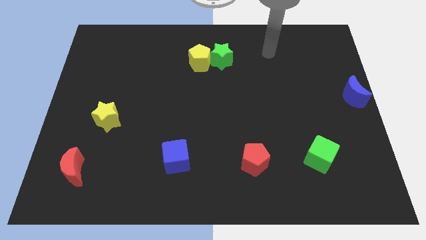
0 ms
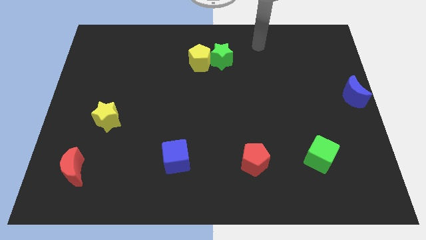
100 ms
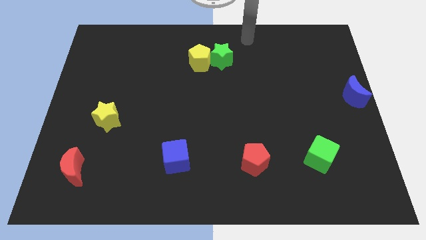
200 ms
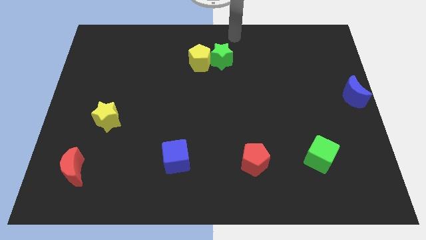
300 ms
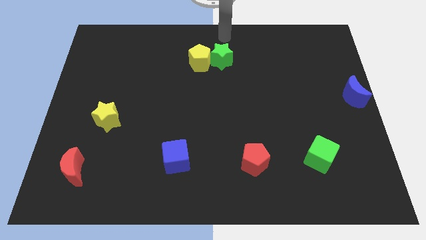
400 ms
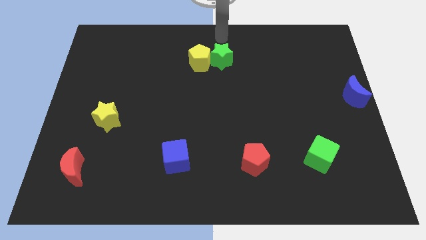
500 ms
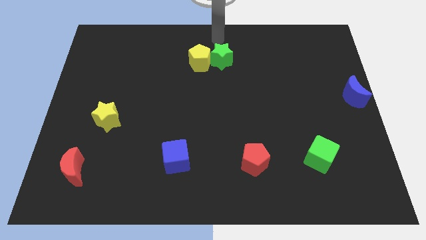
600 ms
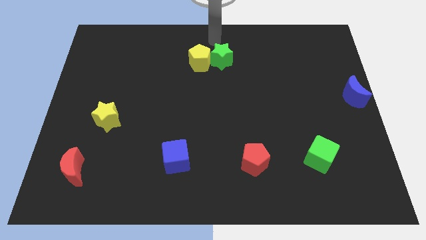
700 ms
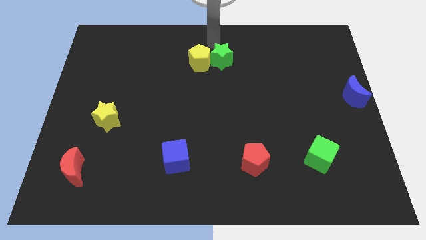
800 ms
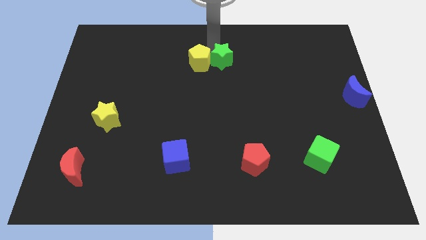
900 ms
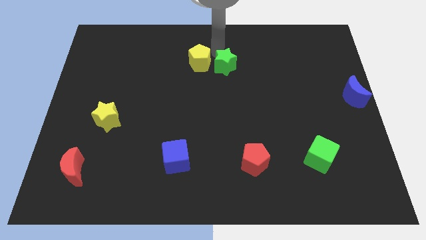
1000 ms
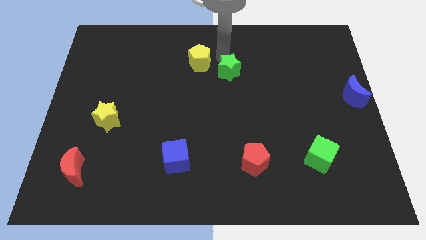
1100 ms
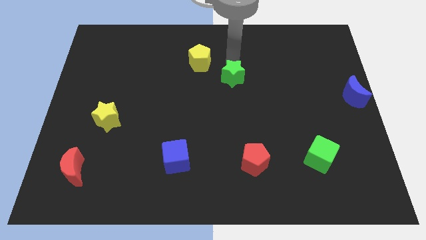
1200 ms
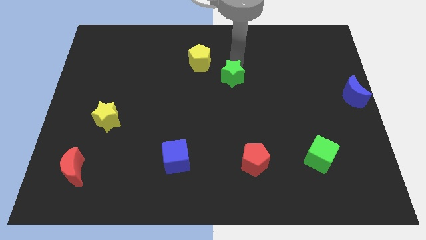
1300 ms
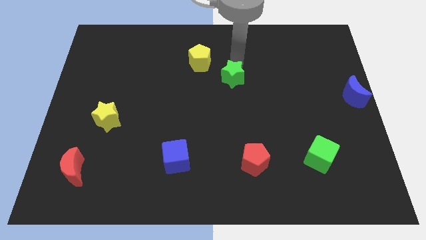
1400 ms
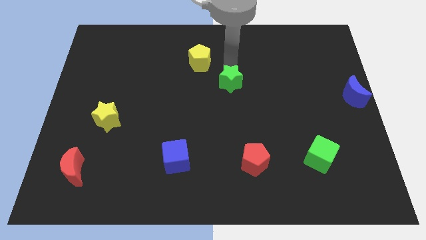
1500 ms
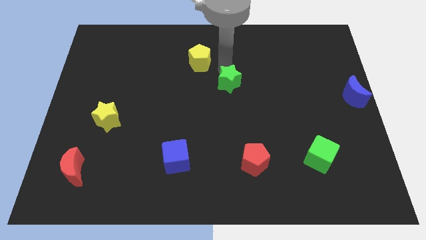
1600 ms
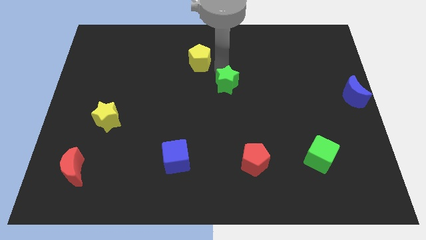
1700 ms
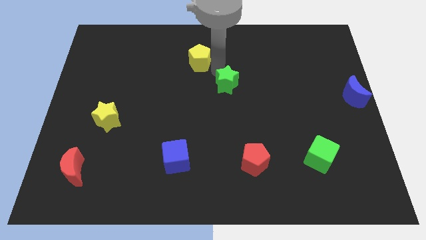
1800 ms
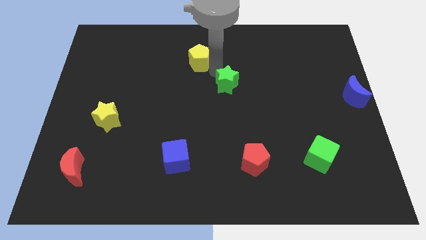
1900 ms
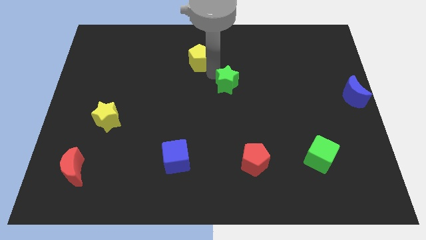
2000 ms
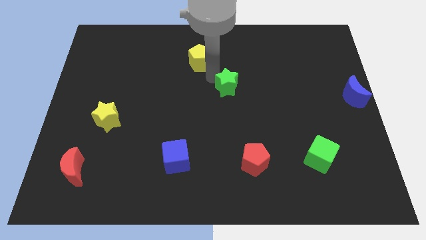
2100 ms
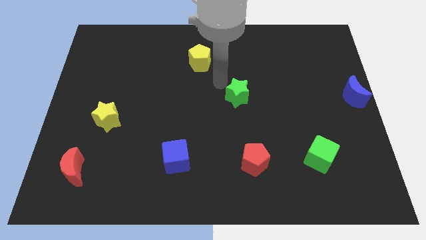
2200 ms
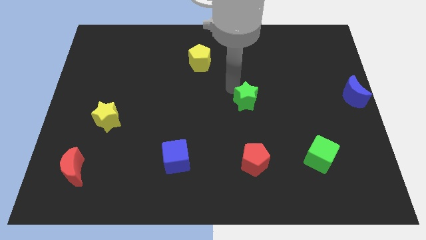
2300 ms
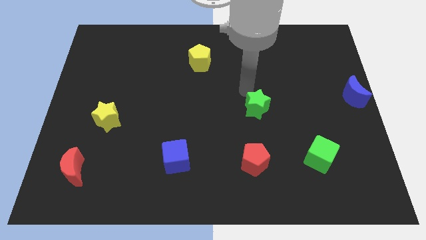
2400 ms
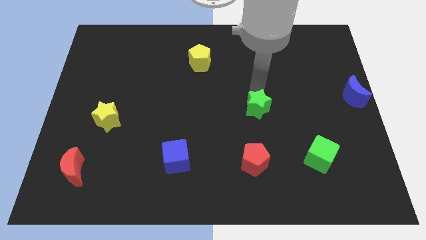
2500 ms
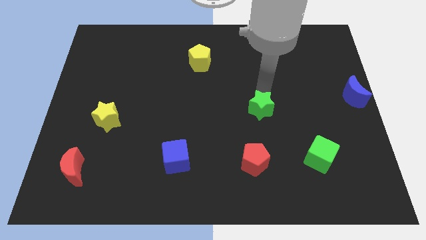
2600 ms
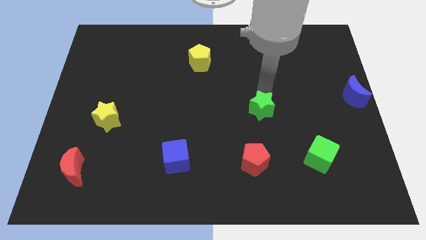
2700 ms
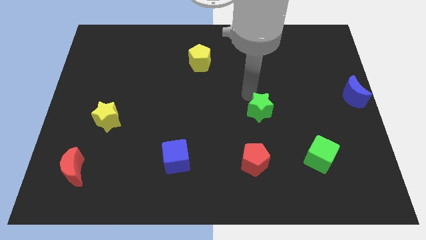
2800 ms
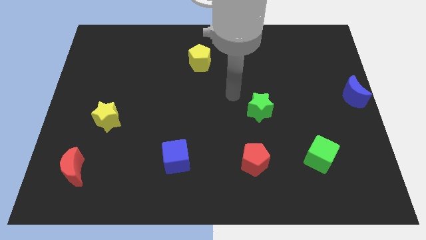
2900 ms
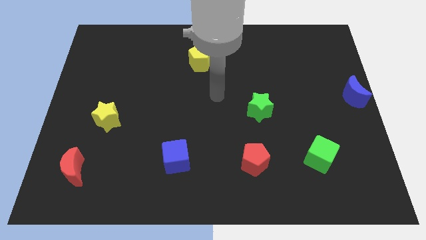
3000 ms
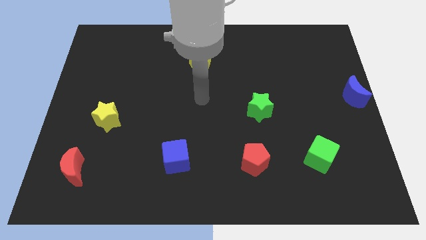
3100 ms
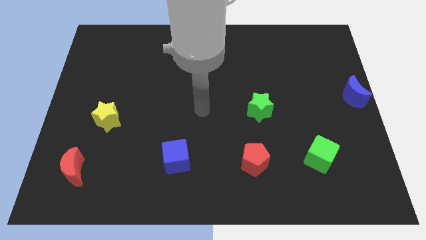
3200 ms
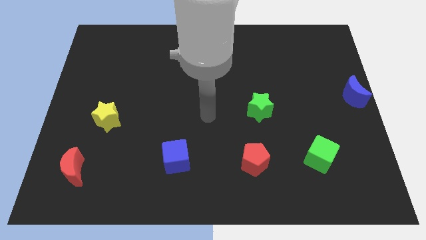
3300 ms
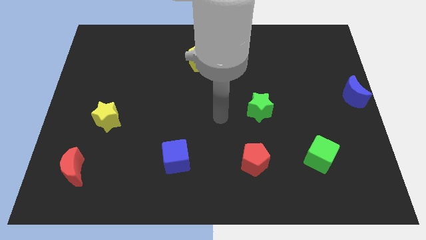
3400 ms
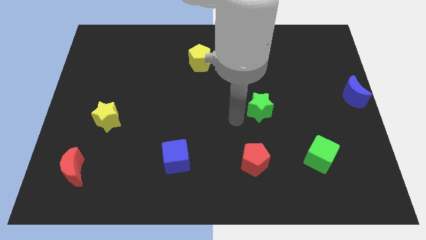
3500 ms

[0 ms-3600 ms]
place the green star towards the top side of the red pentagon

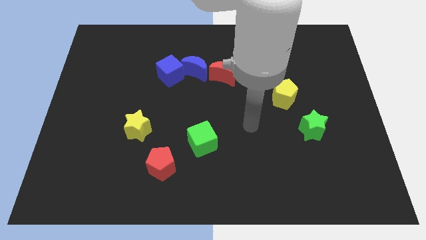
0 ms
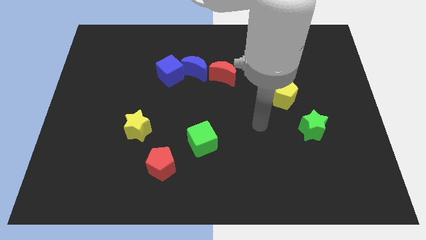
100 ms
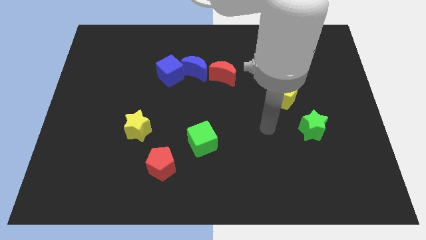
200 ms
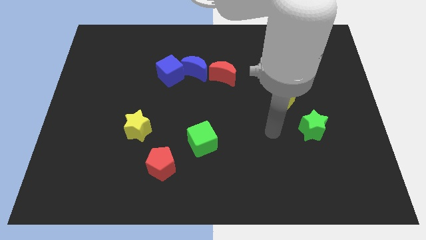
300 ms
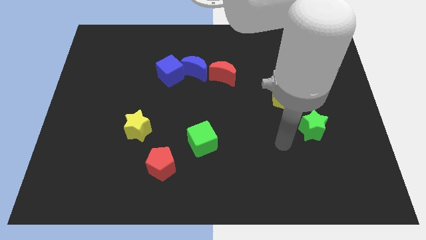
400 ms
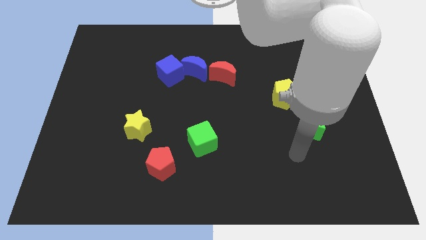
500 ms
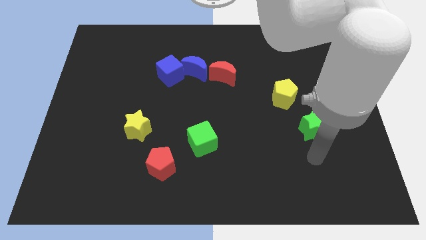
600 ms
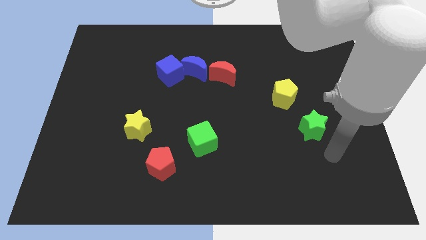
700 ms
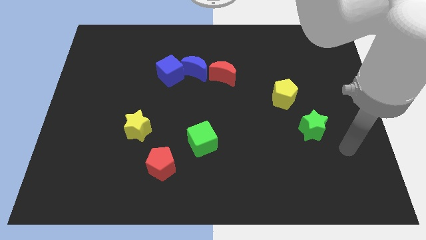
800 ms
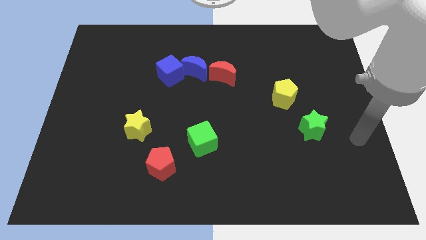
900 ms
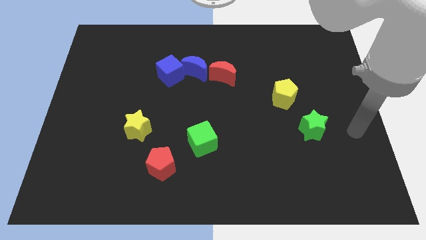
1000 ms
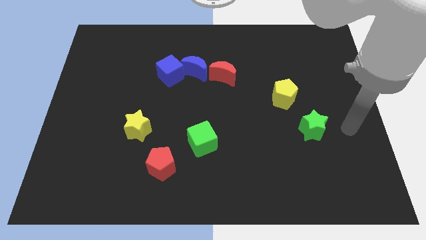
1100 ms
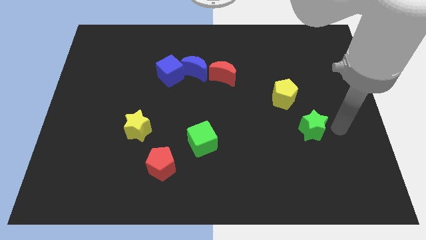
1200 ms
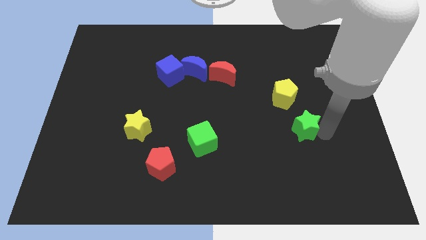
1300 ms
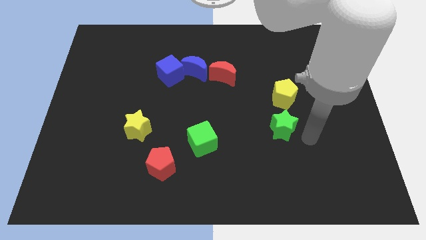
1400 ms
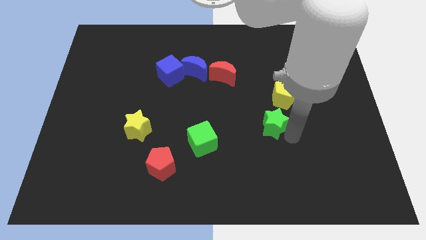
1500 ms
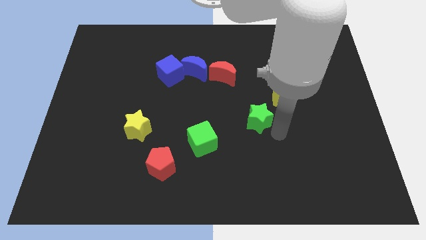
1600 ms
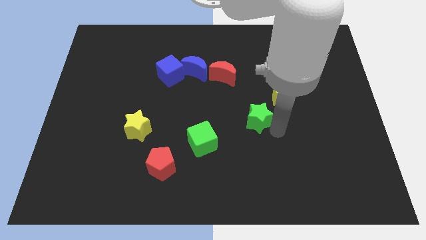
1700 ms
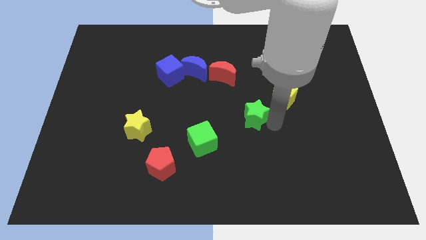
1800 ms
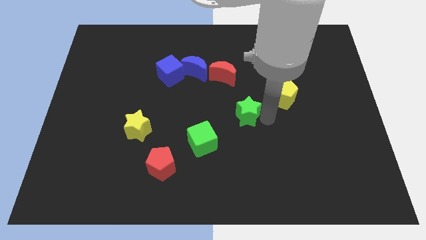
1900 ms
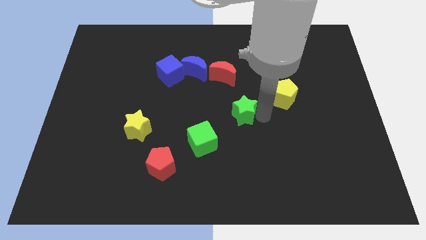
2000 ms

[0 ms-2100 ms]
move the green star diagonally in between the yellow pentagon and green cube

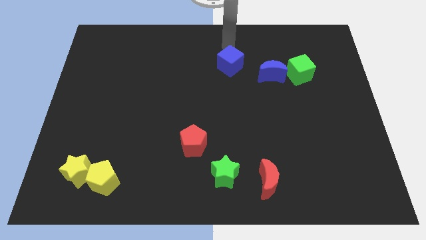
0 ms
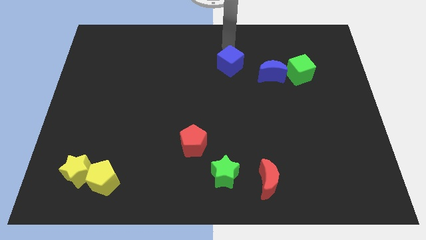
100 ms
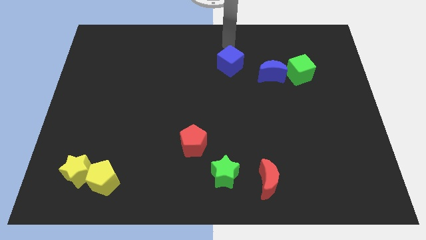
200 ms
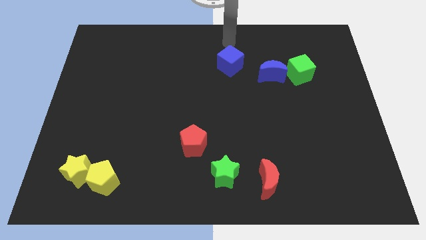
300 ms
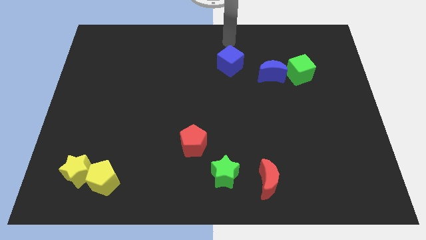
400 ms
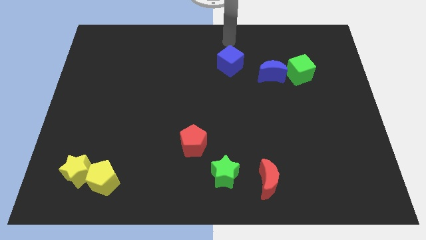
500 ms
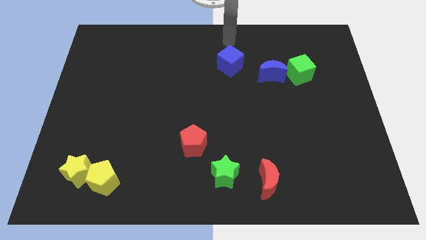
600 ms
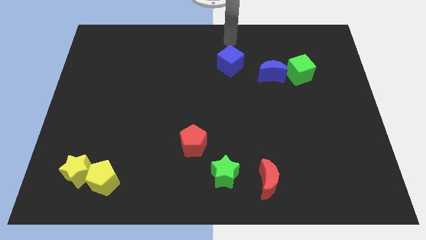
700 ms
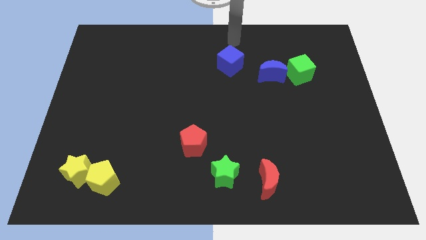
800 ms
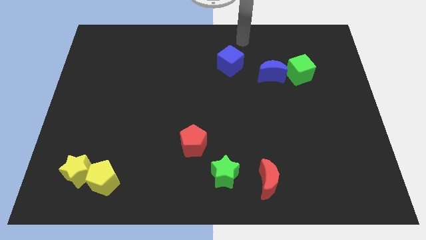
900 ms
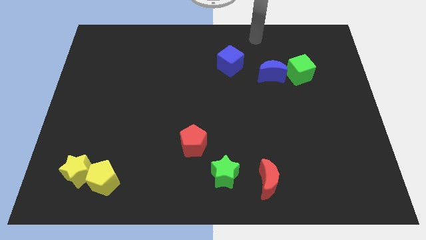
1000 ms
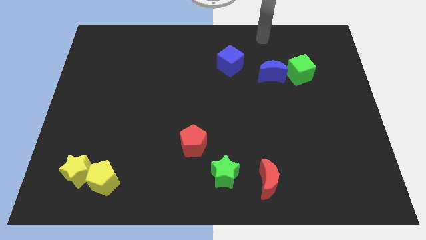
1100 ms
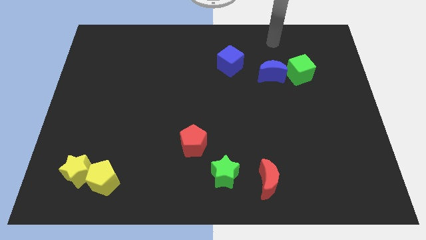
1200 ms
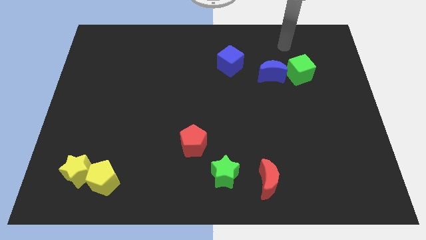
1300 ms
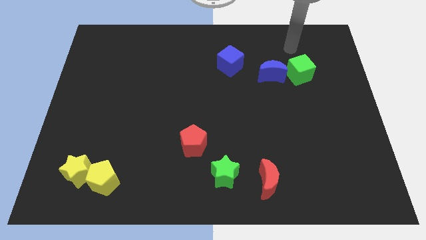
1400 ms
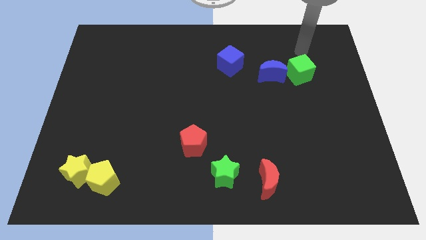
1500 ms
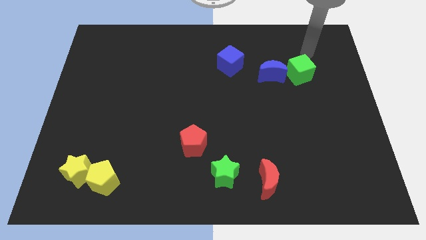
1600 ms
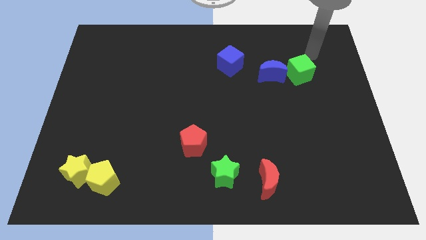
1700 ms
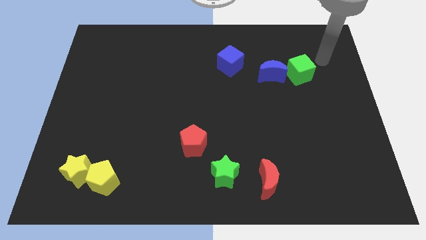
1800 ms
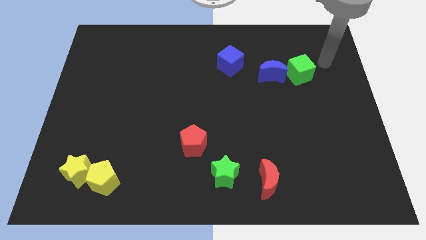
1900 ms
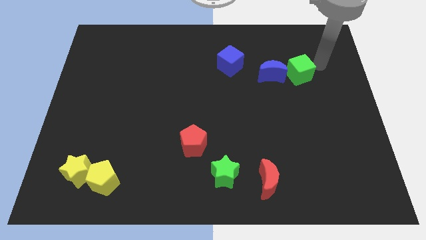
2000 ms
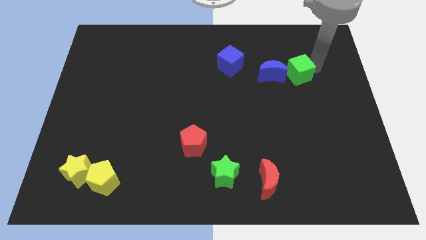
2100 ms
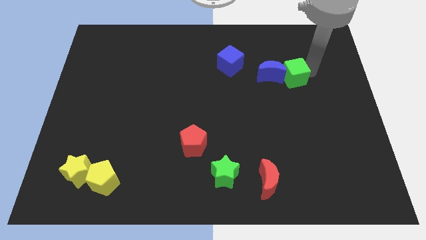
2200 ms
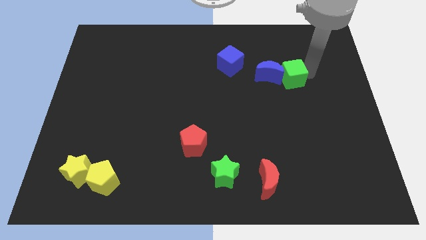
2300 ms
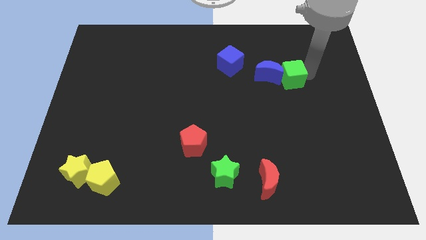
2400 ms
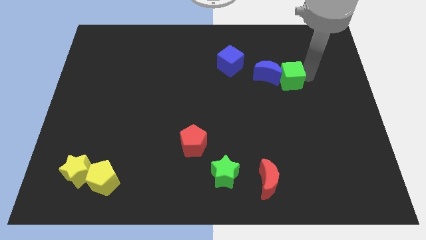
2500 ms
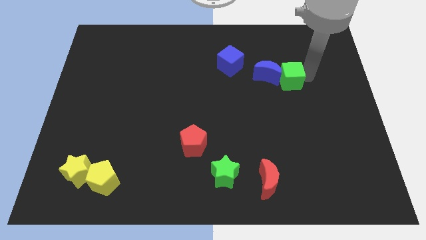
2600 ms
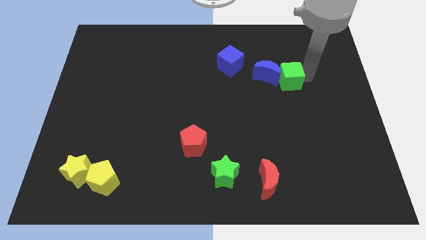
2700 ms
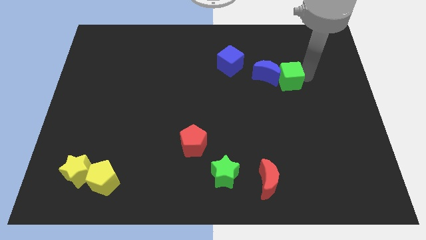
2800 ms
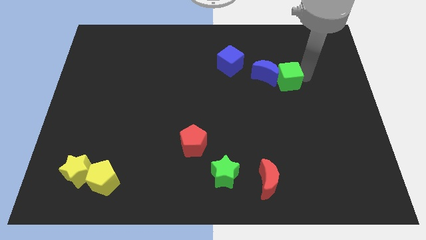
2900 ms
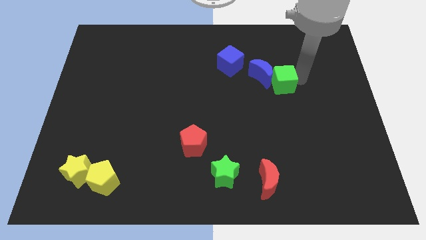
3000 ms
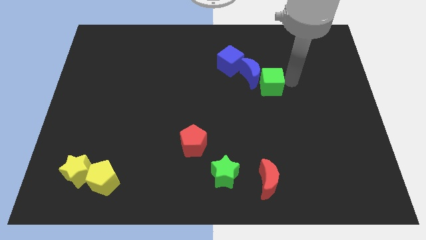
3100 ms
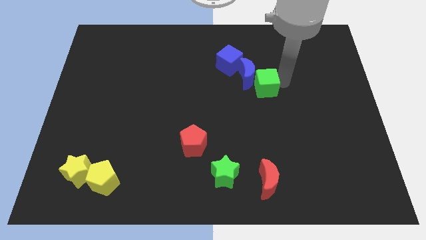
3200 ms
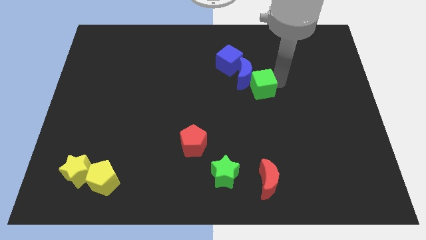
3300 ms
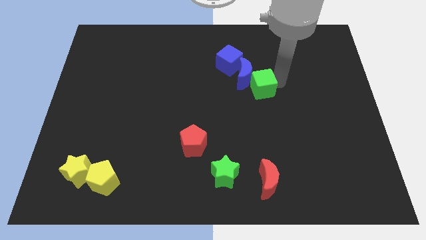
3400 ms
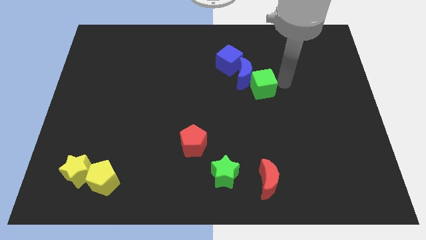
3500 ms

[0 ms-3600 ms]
push green cube above red crescent
